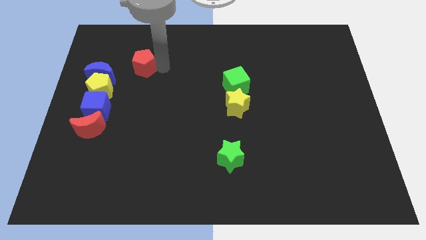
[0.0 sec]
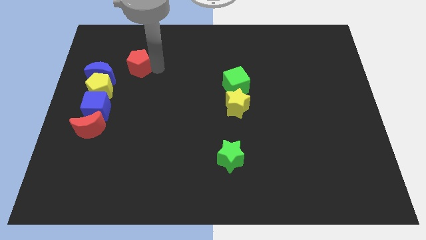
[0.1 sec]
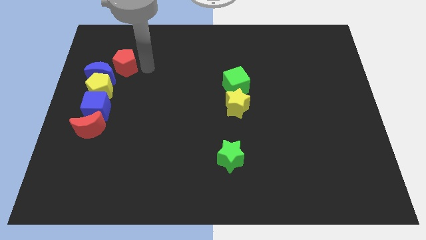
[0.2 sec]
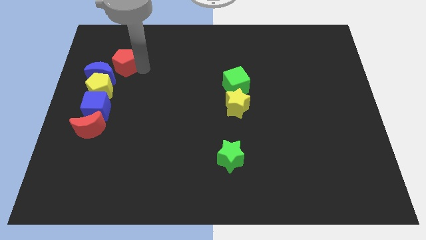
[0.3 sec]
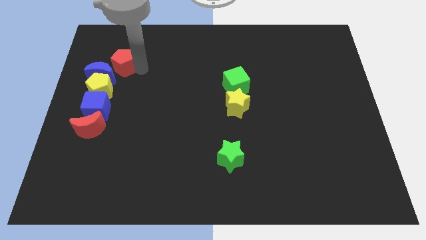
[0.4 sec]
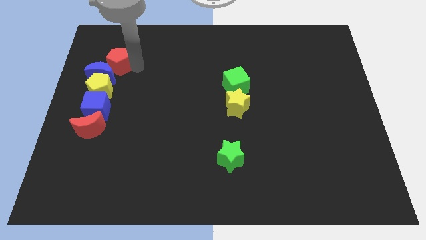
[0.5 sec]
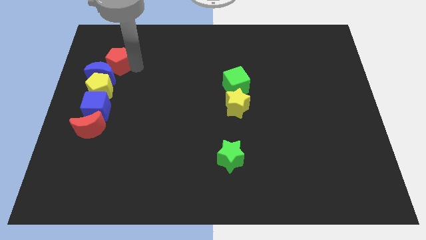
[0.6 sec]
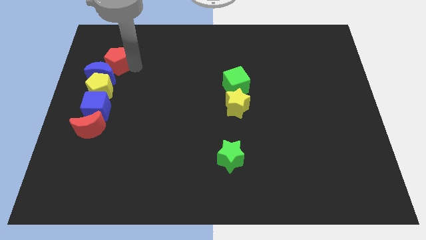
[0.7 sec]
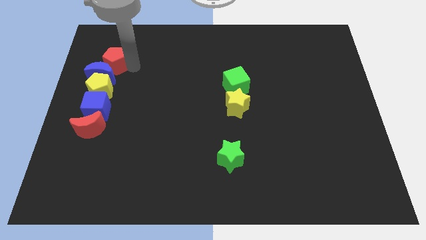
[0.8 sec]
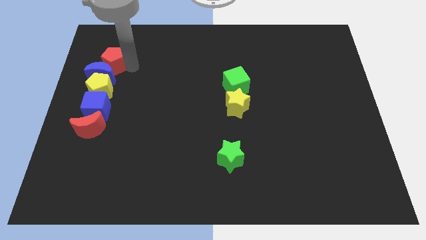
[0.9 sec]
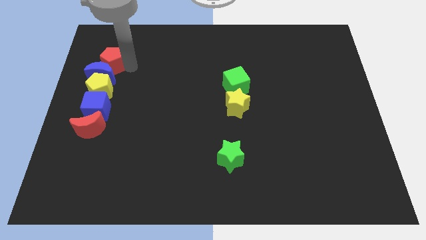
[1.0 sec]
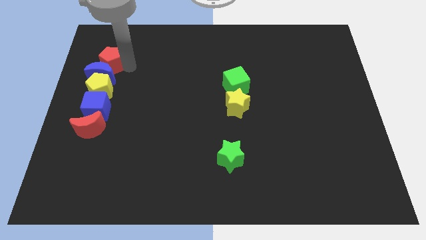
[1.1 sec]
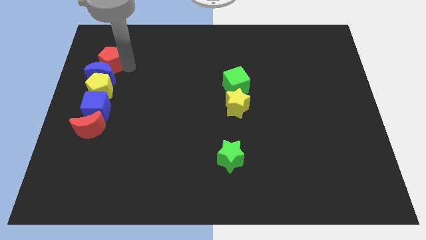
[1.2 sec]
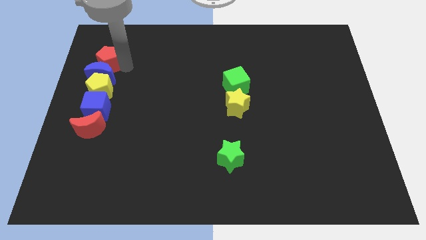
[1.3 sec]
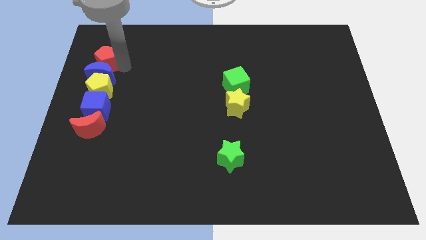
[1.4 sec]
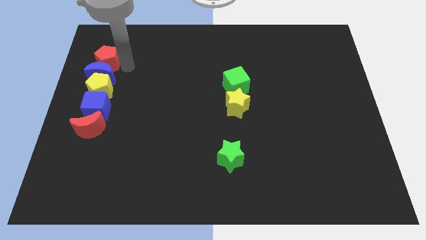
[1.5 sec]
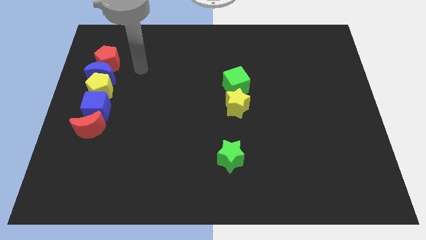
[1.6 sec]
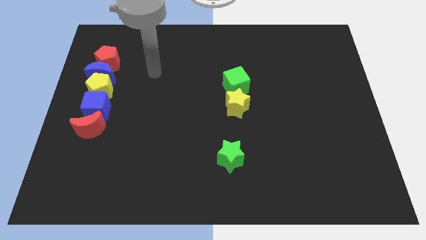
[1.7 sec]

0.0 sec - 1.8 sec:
move the red pentagon to the top of the blue crescent

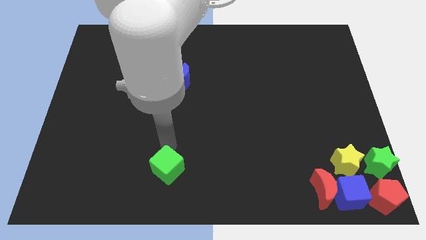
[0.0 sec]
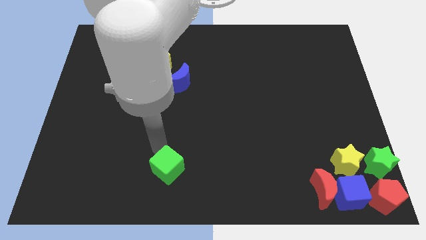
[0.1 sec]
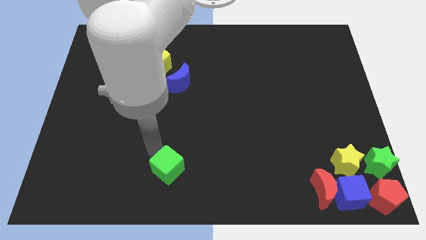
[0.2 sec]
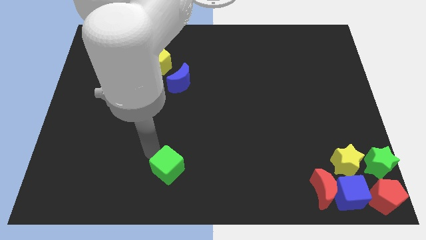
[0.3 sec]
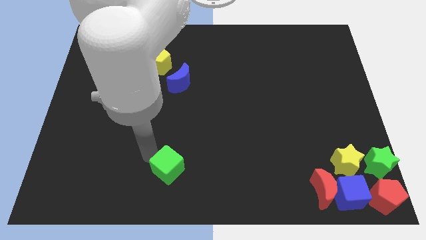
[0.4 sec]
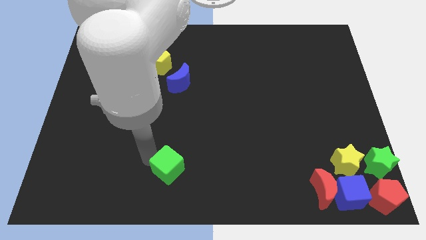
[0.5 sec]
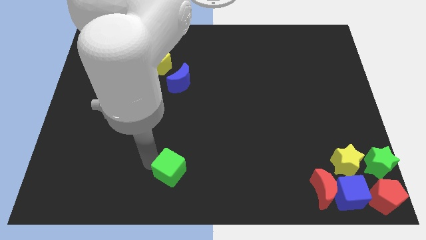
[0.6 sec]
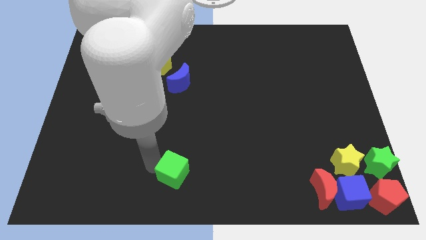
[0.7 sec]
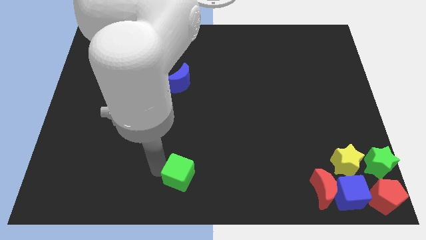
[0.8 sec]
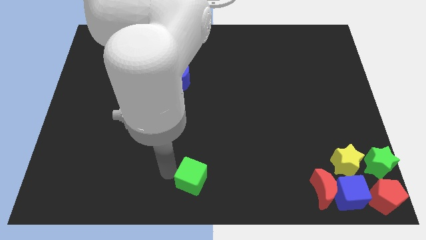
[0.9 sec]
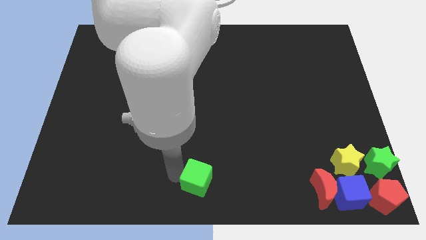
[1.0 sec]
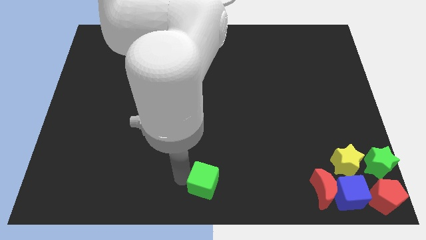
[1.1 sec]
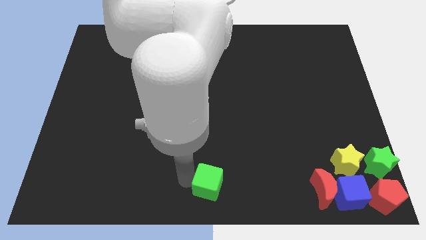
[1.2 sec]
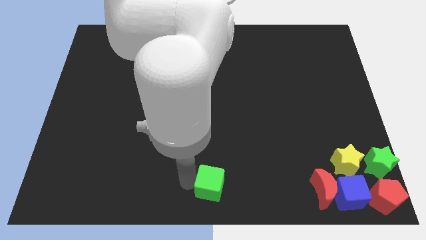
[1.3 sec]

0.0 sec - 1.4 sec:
place the green cube to the bottom middle of the board

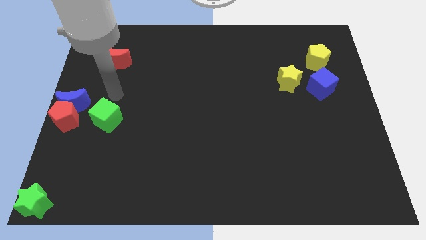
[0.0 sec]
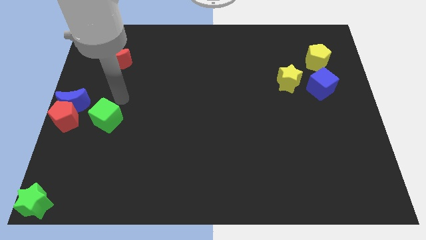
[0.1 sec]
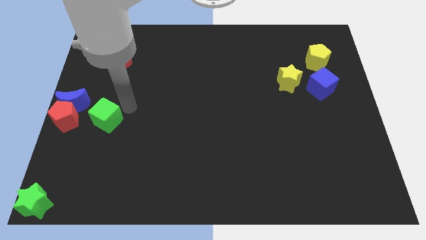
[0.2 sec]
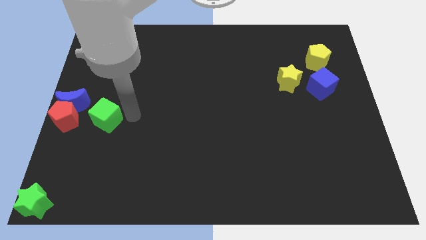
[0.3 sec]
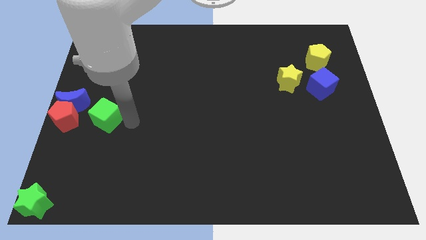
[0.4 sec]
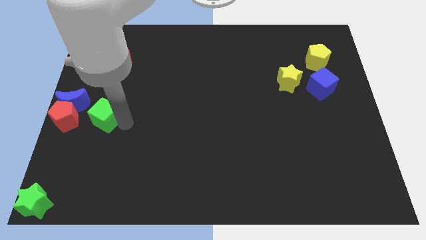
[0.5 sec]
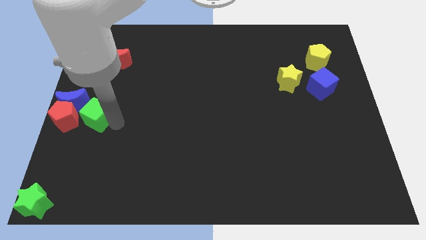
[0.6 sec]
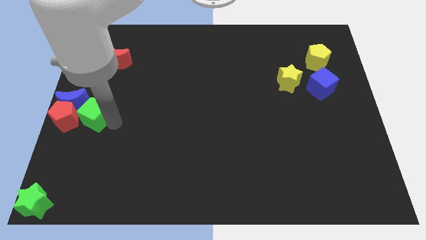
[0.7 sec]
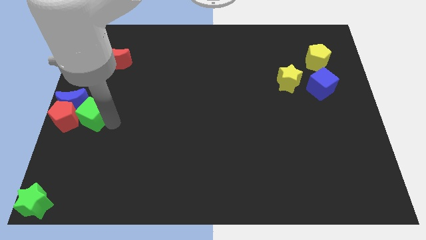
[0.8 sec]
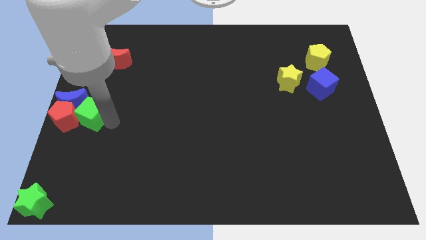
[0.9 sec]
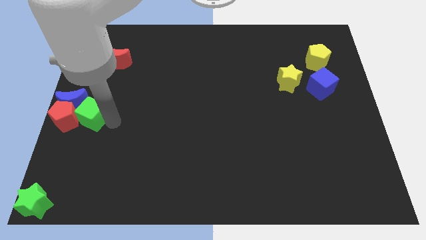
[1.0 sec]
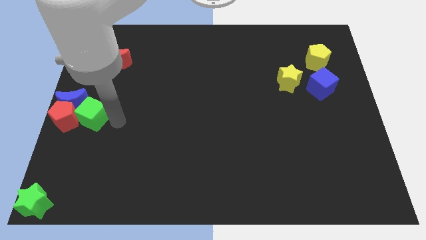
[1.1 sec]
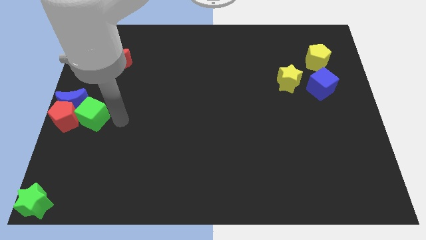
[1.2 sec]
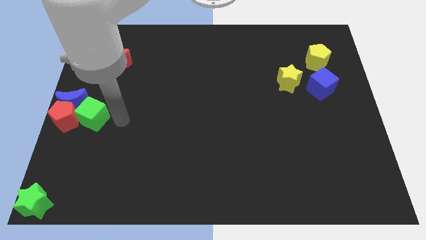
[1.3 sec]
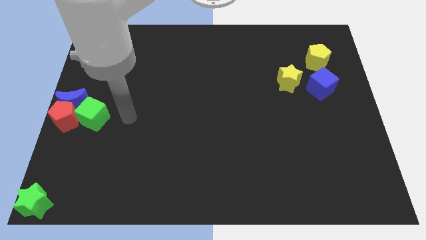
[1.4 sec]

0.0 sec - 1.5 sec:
move the green cube slightly to the center left of the board

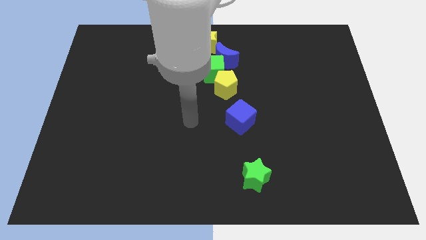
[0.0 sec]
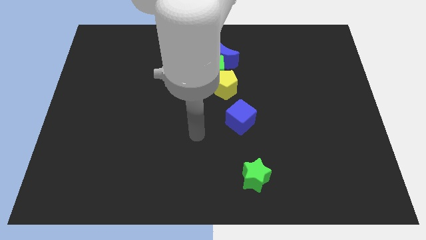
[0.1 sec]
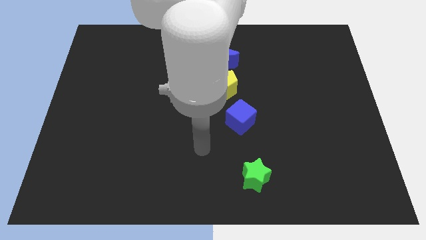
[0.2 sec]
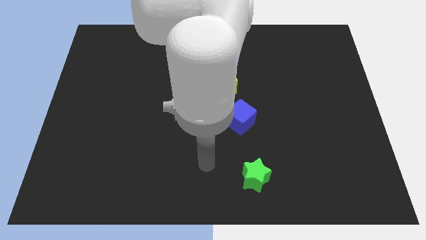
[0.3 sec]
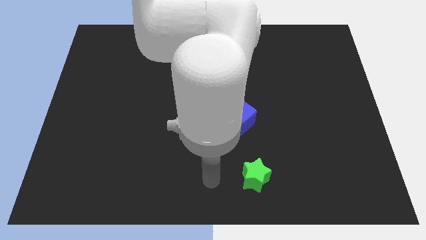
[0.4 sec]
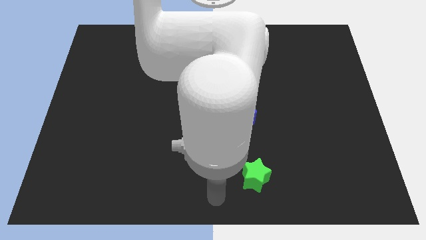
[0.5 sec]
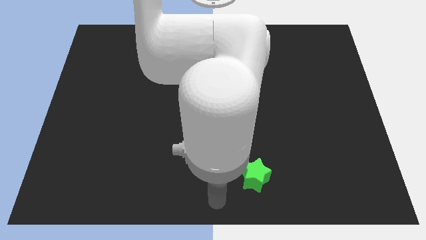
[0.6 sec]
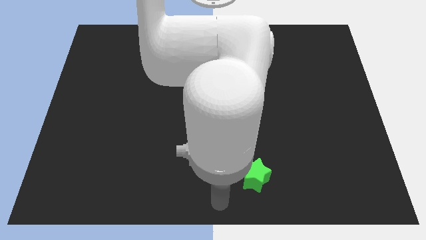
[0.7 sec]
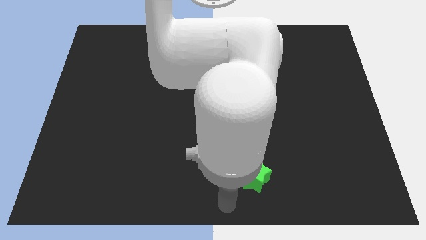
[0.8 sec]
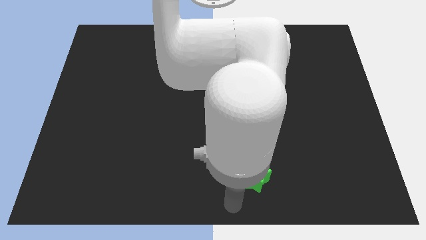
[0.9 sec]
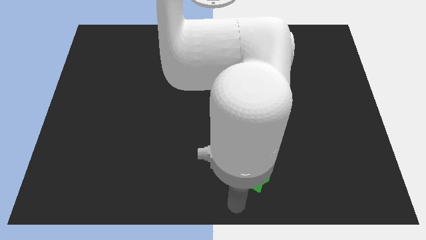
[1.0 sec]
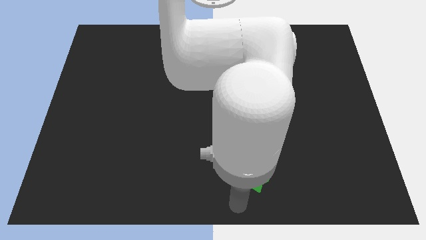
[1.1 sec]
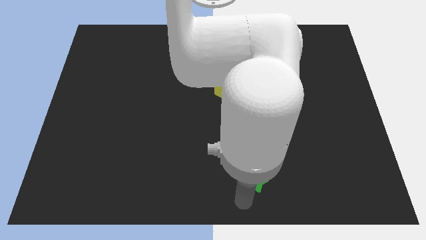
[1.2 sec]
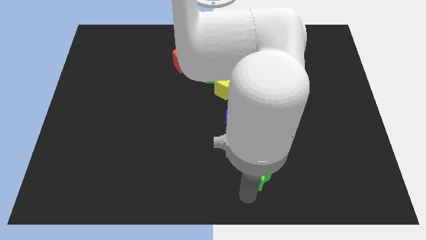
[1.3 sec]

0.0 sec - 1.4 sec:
move your arm towards the green star

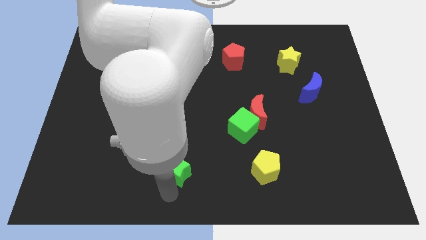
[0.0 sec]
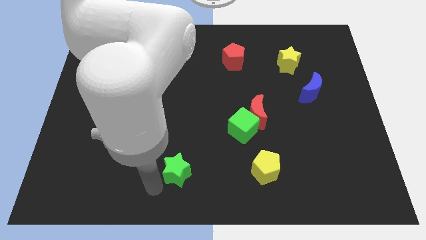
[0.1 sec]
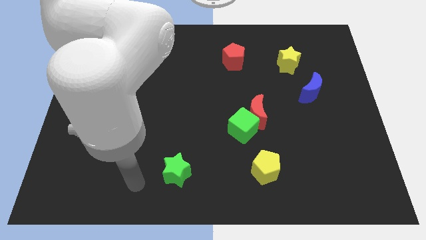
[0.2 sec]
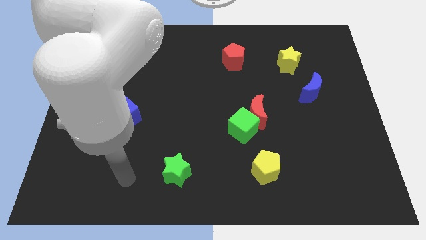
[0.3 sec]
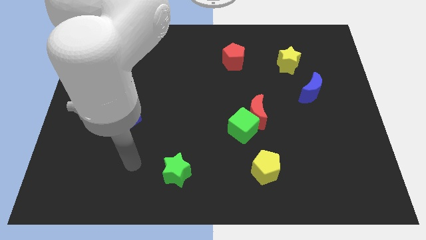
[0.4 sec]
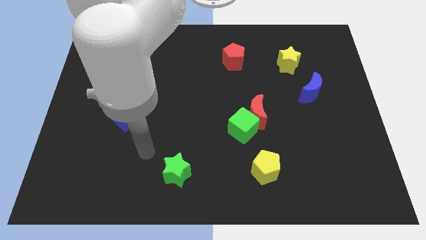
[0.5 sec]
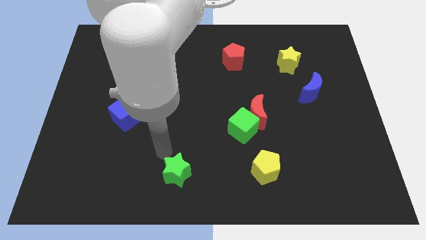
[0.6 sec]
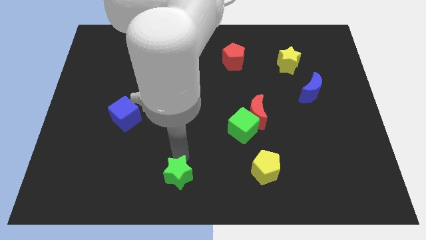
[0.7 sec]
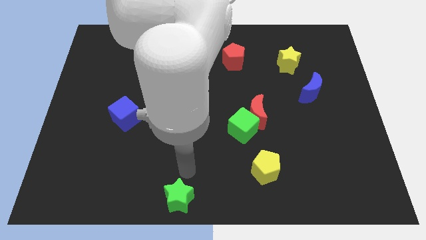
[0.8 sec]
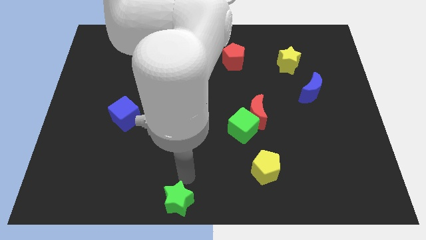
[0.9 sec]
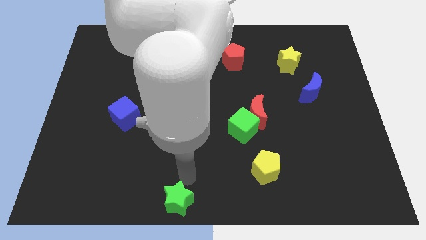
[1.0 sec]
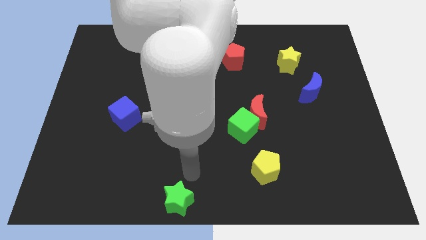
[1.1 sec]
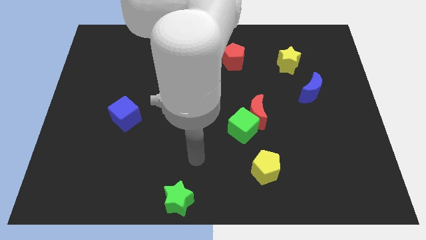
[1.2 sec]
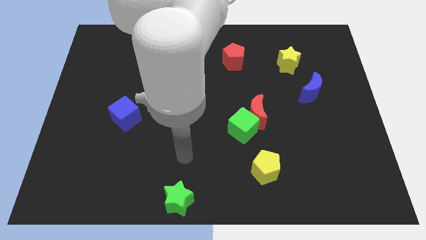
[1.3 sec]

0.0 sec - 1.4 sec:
push the green star to the bottom center of the board

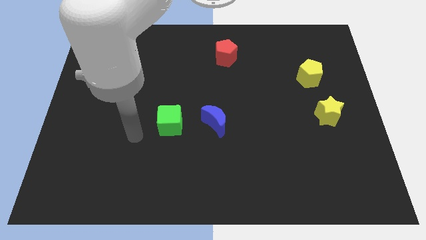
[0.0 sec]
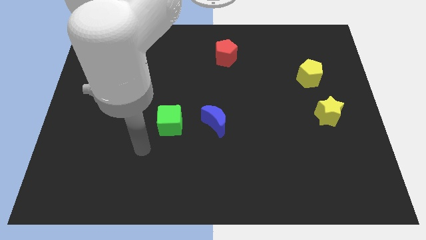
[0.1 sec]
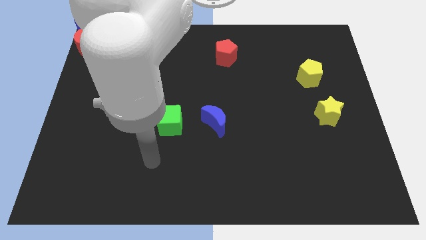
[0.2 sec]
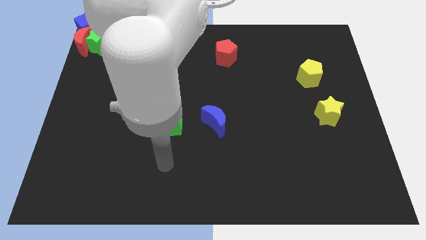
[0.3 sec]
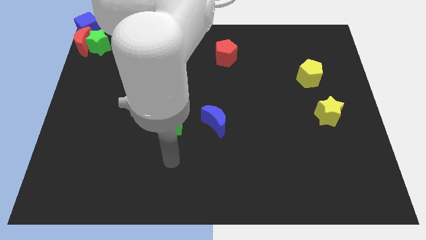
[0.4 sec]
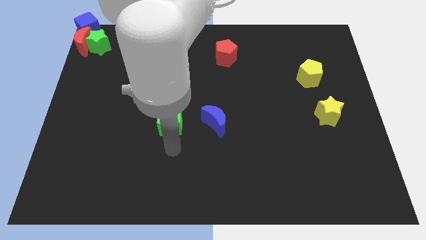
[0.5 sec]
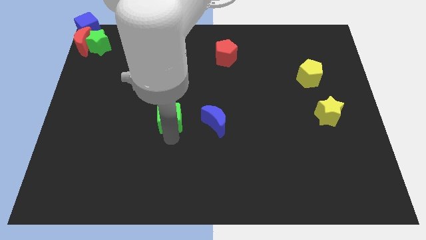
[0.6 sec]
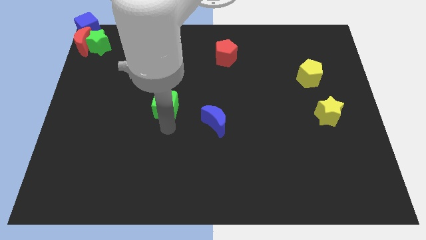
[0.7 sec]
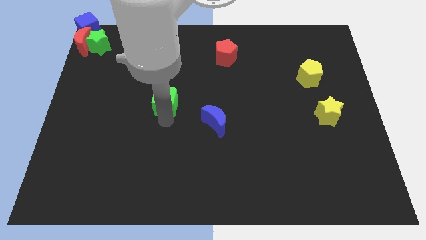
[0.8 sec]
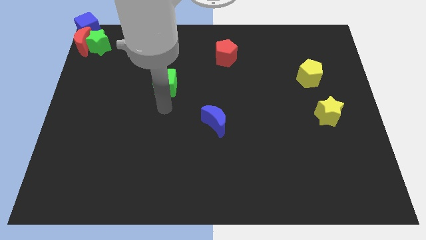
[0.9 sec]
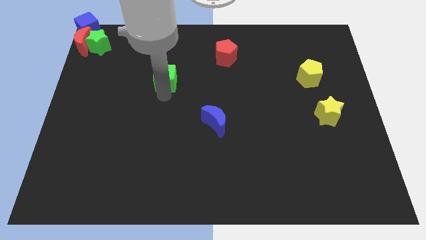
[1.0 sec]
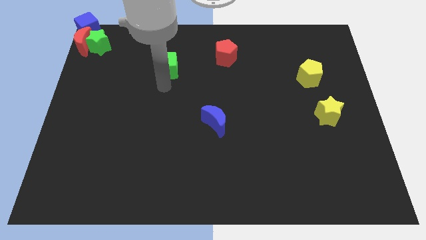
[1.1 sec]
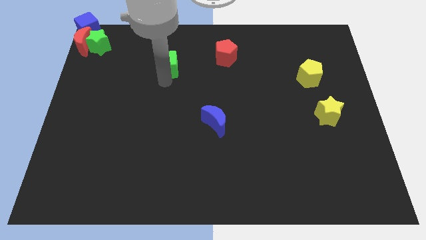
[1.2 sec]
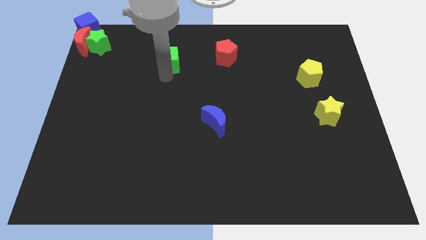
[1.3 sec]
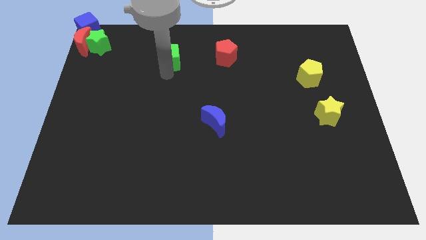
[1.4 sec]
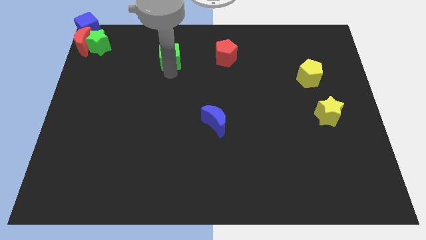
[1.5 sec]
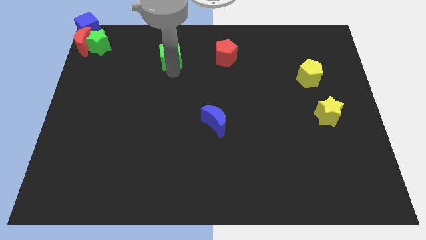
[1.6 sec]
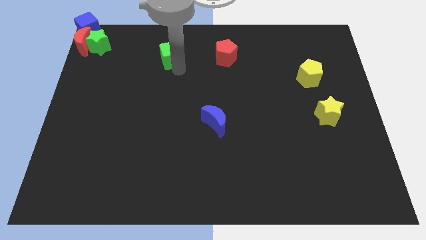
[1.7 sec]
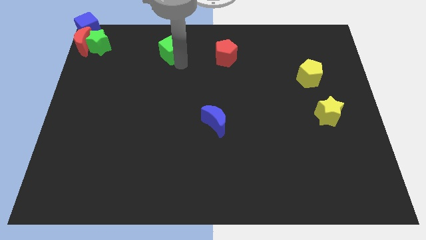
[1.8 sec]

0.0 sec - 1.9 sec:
slide the green cube parallel to red pentagon
